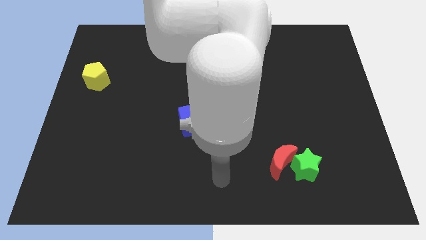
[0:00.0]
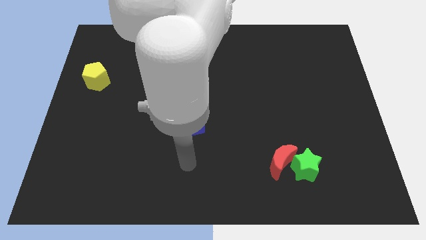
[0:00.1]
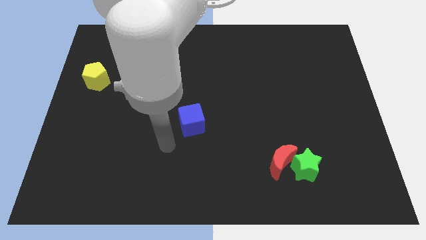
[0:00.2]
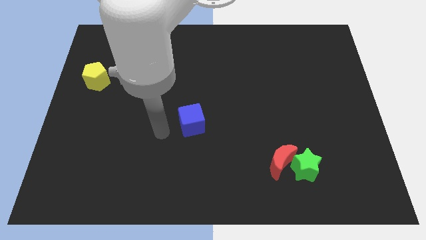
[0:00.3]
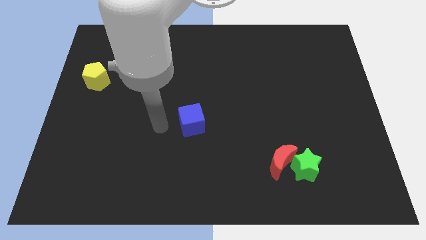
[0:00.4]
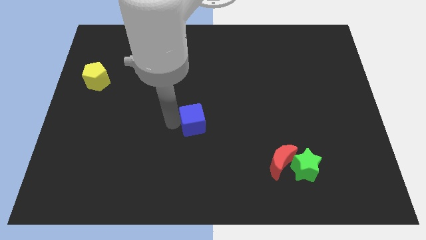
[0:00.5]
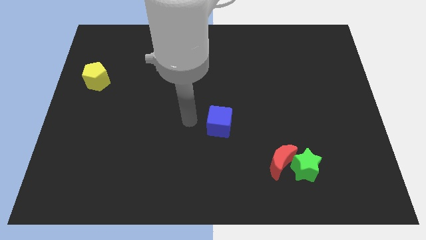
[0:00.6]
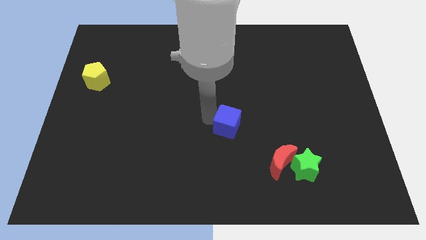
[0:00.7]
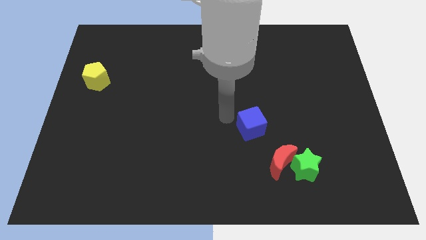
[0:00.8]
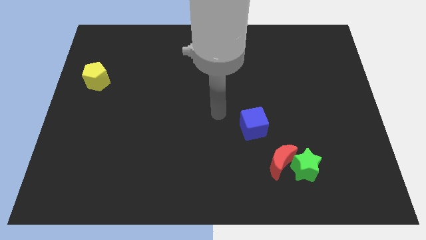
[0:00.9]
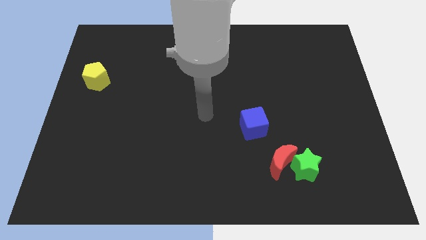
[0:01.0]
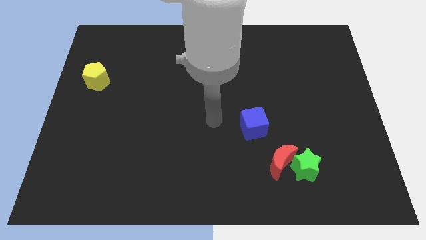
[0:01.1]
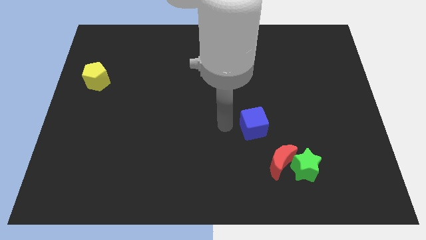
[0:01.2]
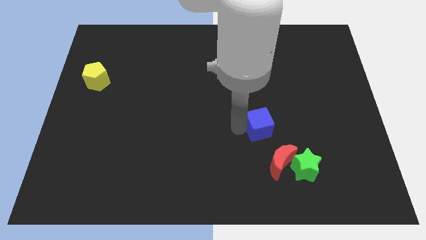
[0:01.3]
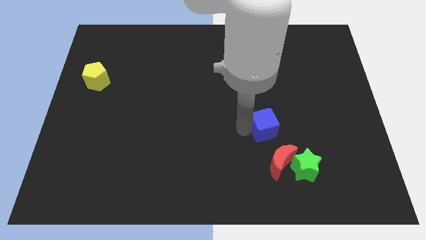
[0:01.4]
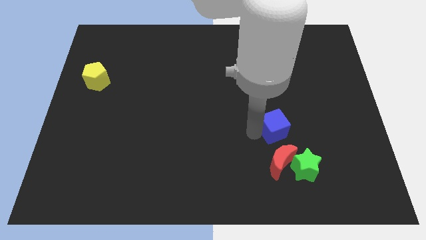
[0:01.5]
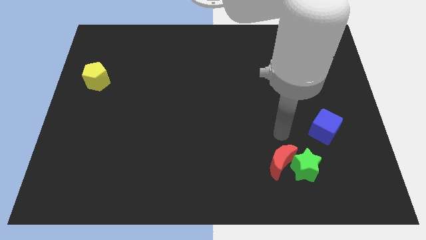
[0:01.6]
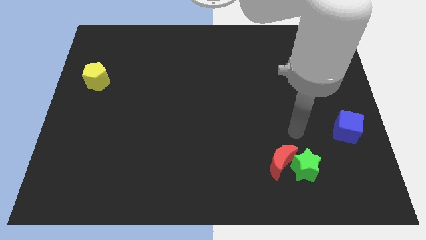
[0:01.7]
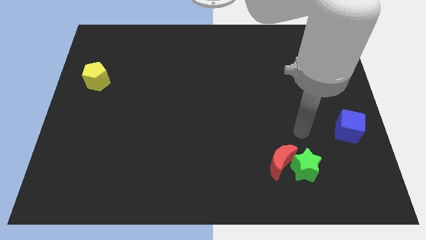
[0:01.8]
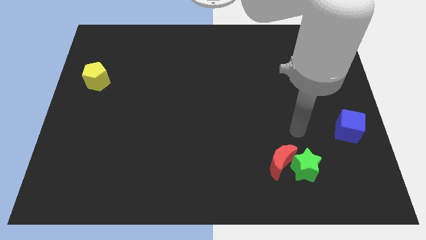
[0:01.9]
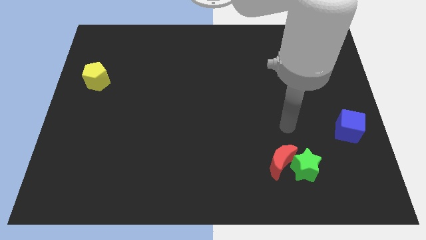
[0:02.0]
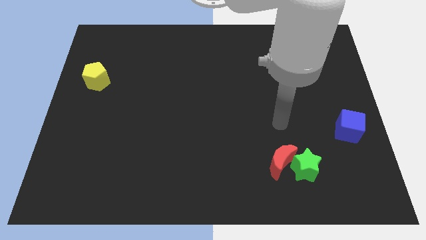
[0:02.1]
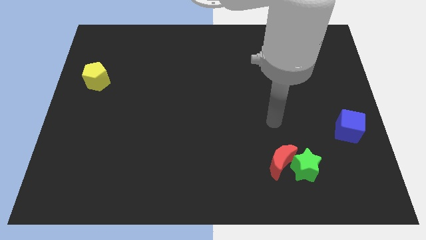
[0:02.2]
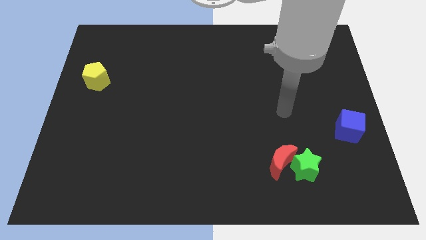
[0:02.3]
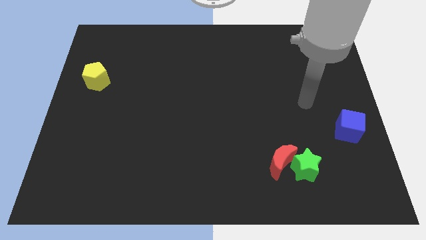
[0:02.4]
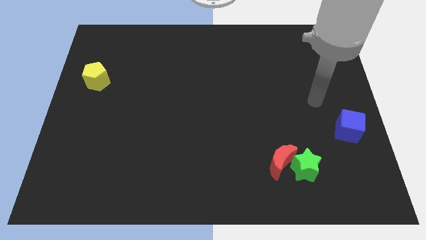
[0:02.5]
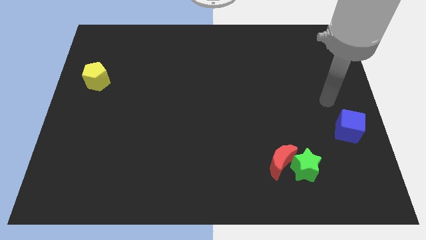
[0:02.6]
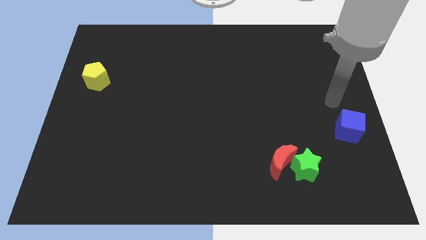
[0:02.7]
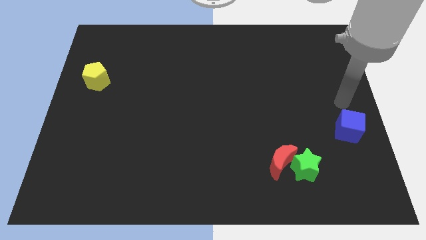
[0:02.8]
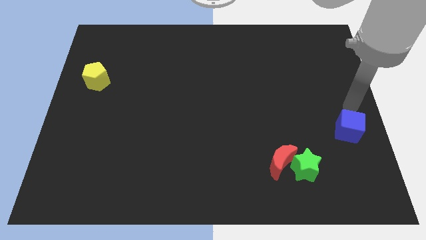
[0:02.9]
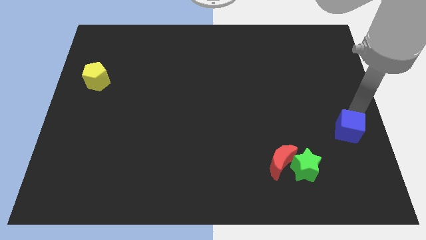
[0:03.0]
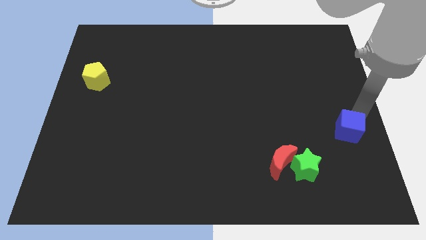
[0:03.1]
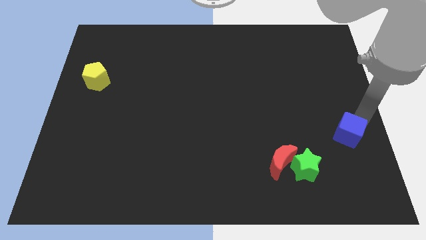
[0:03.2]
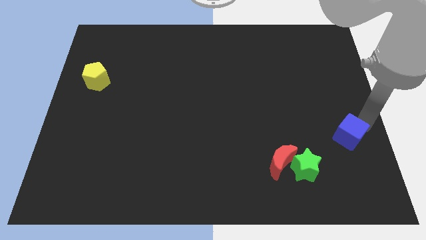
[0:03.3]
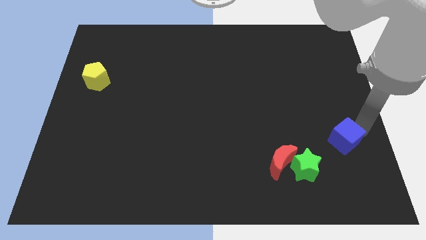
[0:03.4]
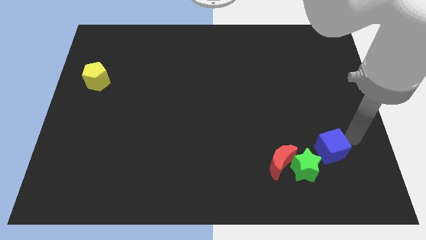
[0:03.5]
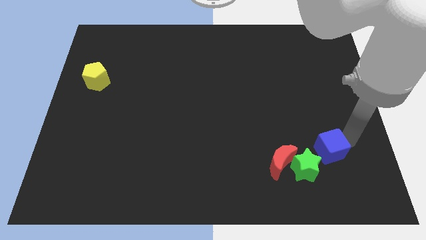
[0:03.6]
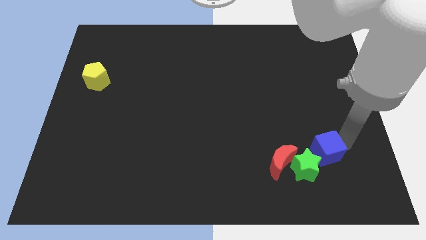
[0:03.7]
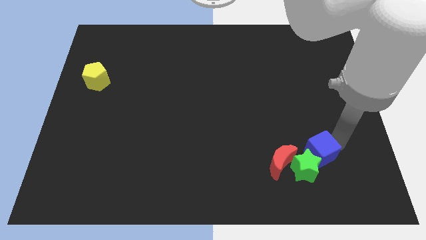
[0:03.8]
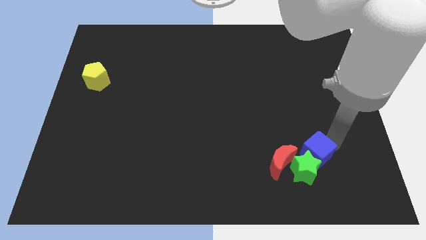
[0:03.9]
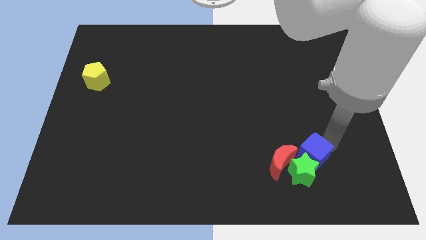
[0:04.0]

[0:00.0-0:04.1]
slide the cube close to the green block

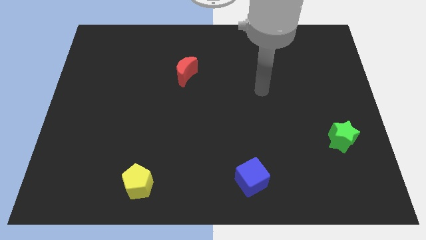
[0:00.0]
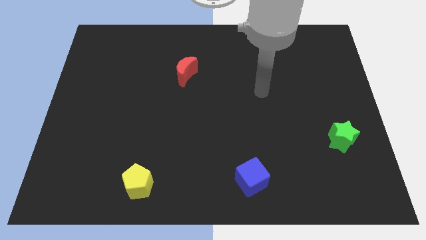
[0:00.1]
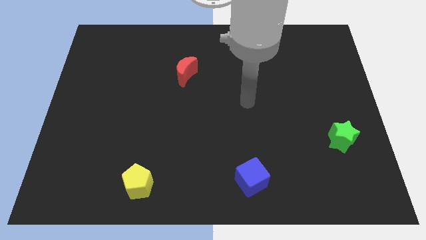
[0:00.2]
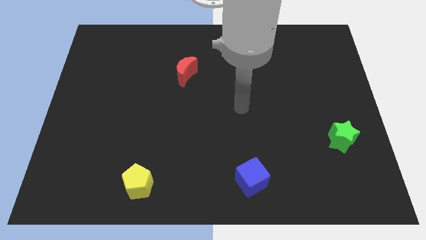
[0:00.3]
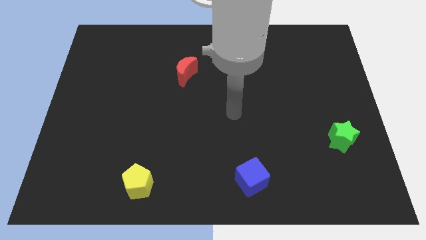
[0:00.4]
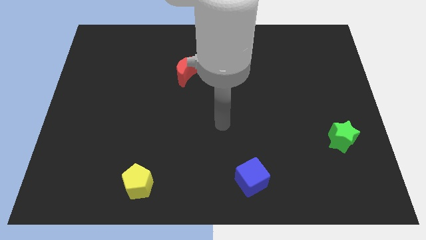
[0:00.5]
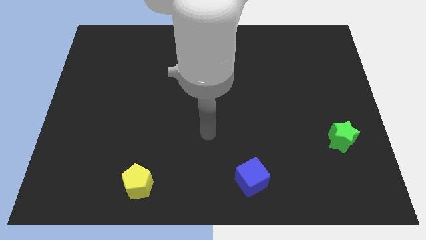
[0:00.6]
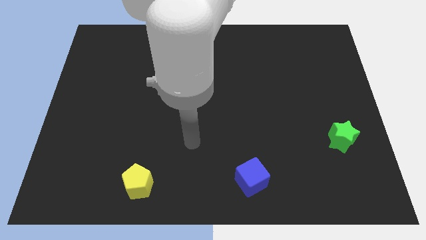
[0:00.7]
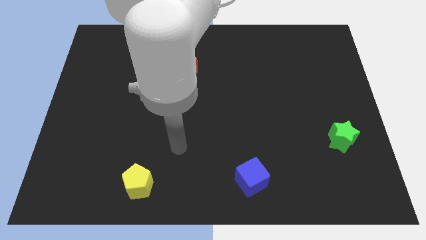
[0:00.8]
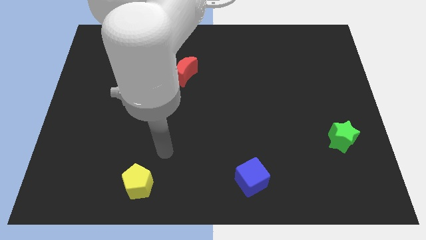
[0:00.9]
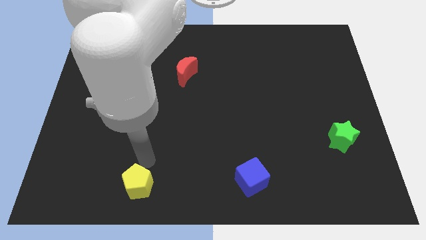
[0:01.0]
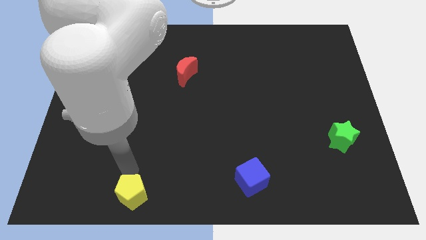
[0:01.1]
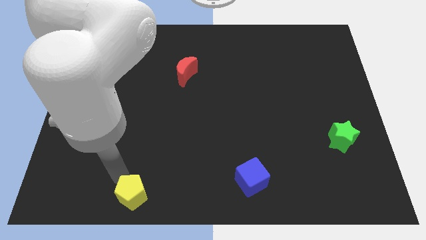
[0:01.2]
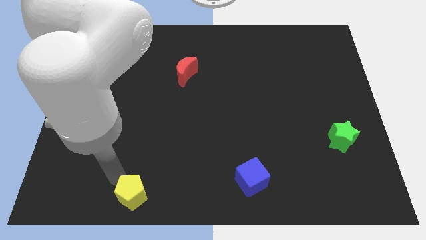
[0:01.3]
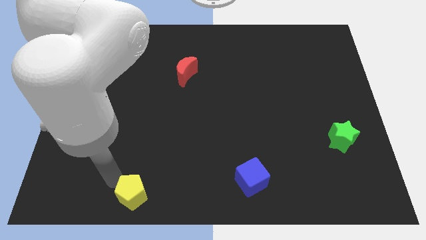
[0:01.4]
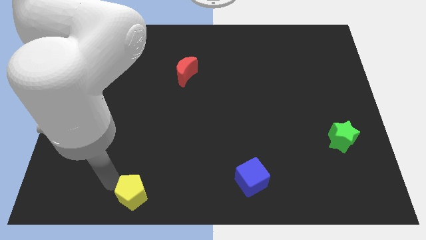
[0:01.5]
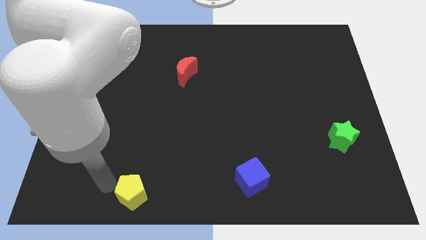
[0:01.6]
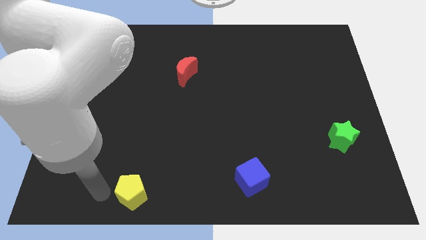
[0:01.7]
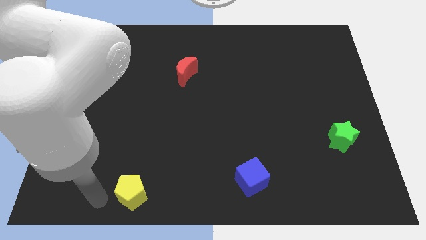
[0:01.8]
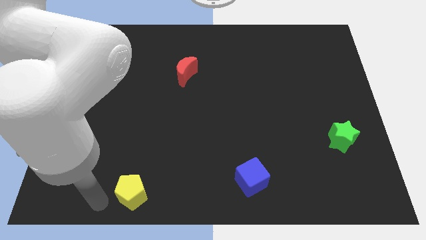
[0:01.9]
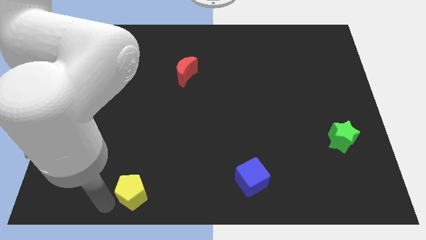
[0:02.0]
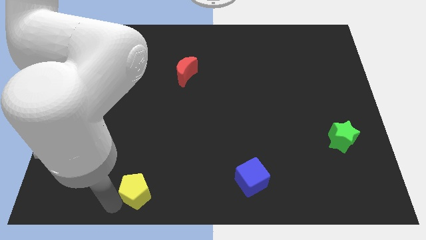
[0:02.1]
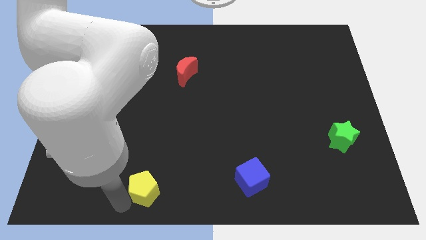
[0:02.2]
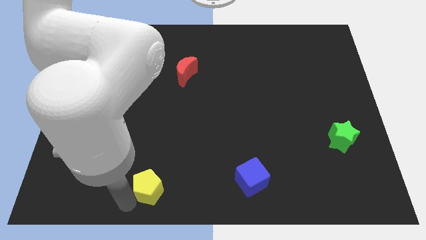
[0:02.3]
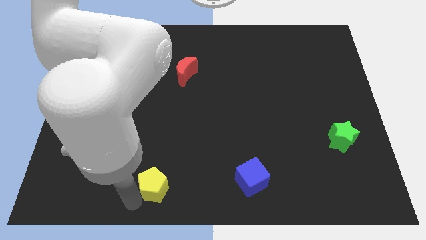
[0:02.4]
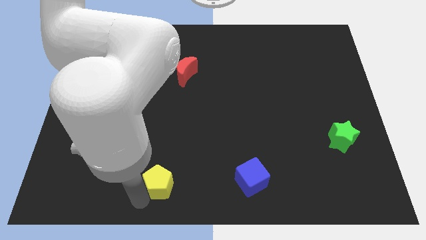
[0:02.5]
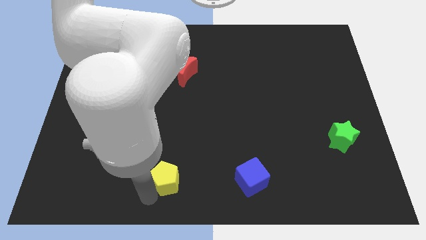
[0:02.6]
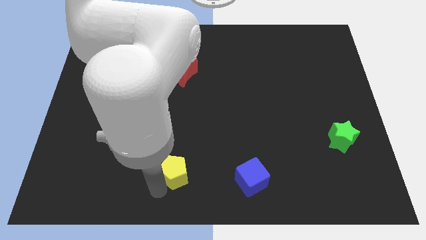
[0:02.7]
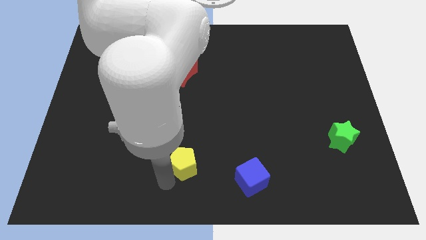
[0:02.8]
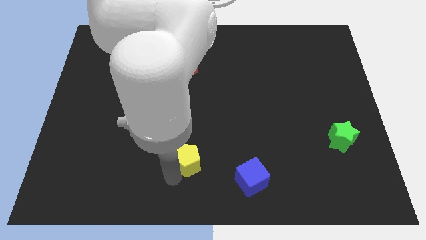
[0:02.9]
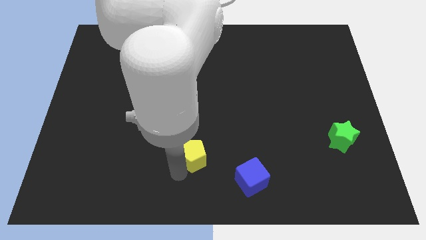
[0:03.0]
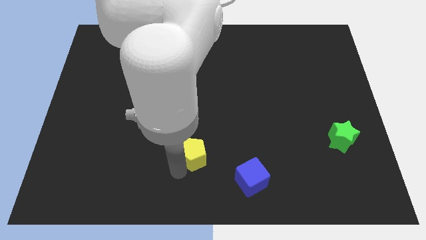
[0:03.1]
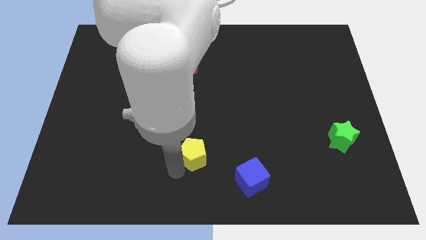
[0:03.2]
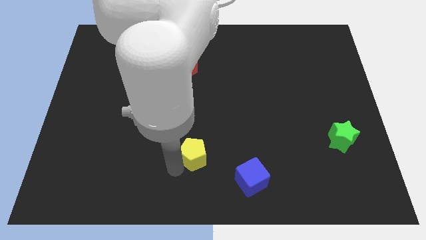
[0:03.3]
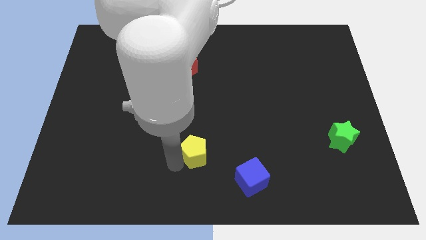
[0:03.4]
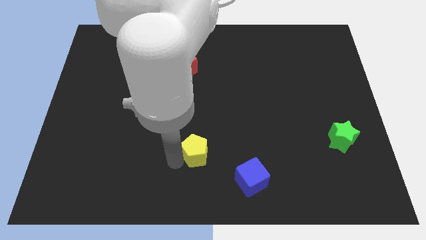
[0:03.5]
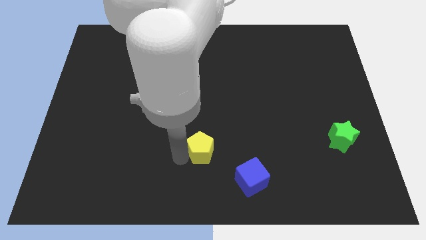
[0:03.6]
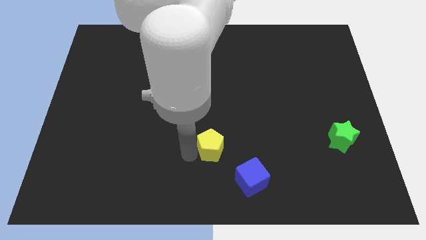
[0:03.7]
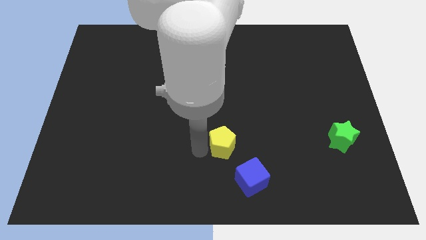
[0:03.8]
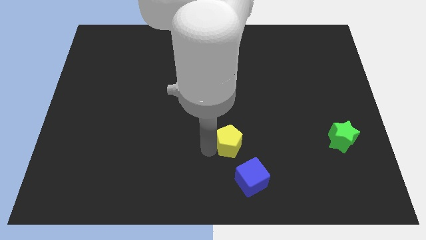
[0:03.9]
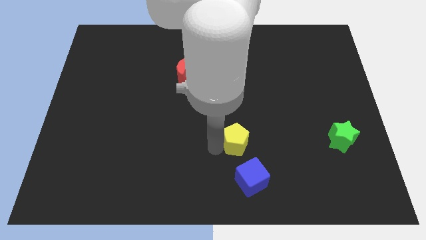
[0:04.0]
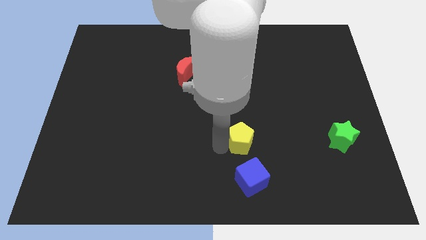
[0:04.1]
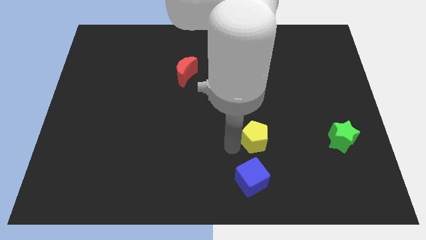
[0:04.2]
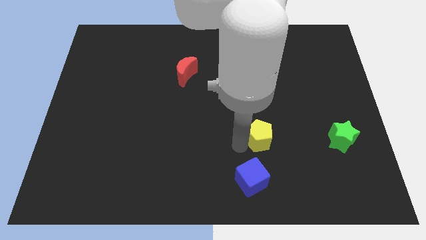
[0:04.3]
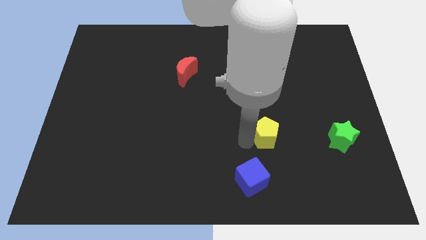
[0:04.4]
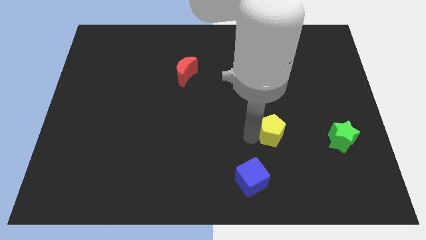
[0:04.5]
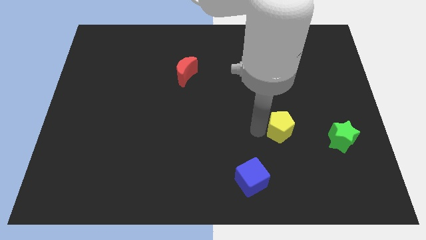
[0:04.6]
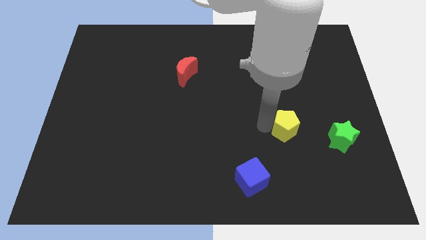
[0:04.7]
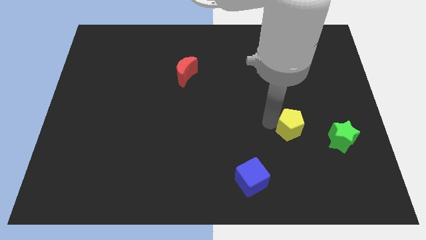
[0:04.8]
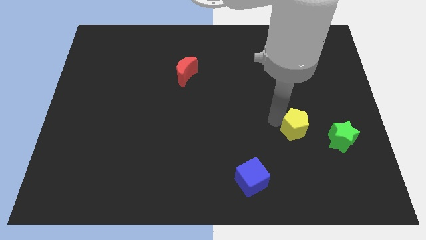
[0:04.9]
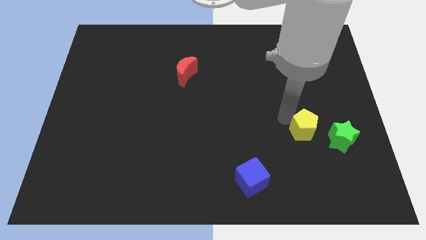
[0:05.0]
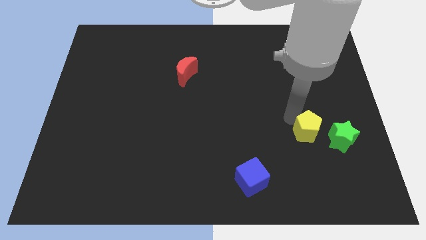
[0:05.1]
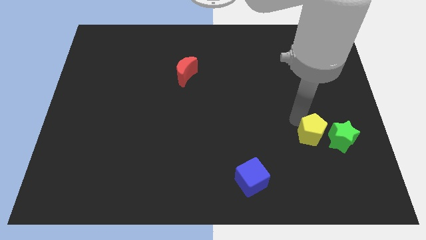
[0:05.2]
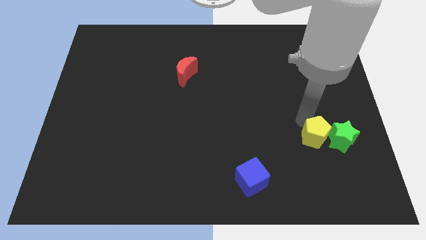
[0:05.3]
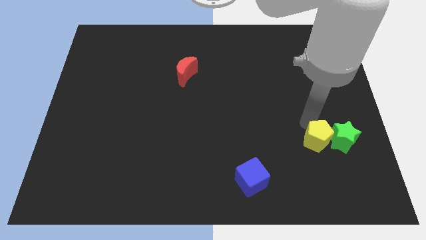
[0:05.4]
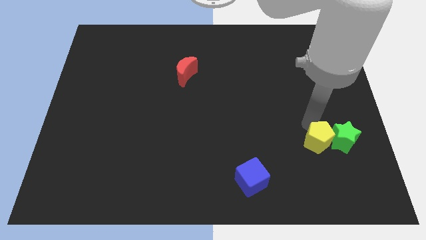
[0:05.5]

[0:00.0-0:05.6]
put the yellow block to the green block
